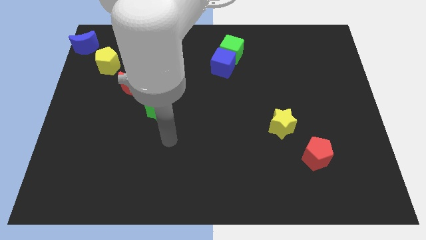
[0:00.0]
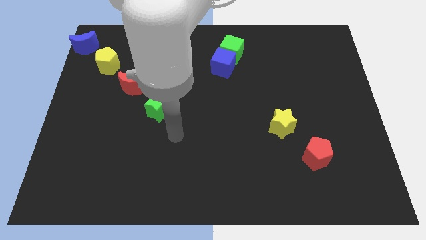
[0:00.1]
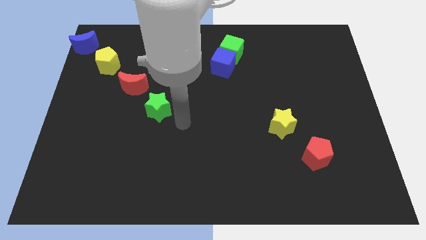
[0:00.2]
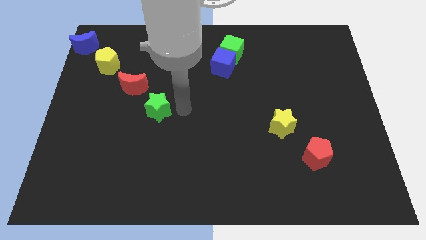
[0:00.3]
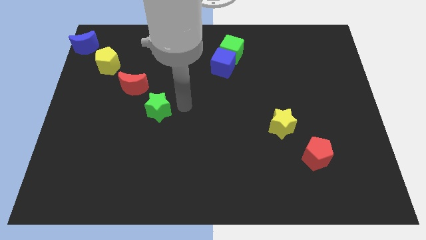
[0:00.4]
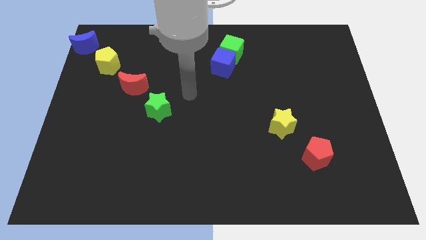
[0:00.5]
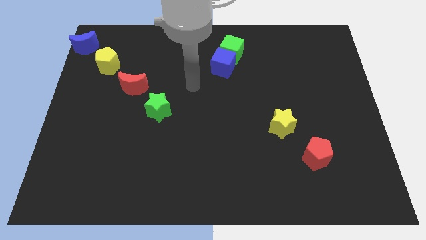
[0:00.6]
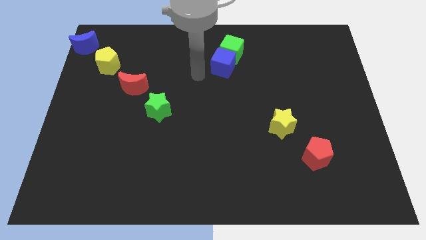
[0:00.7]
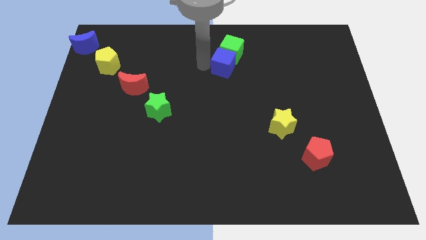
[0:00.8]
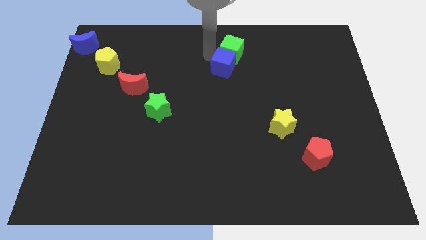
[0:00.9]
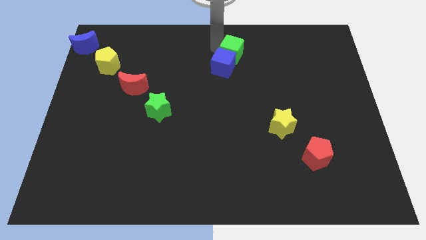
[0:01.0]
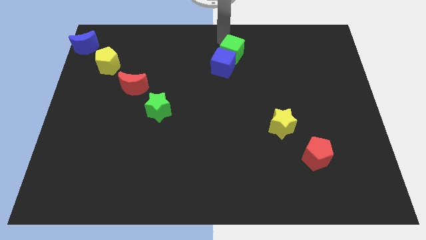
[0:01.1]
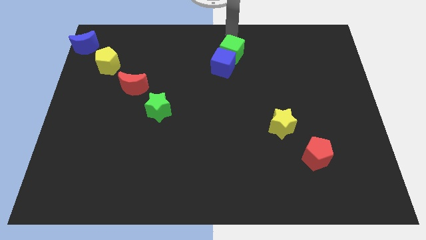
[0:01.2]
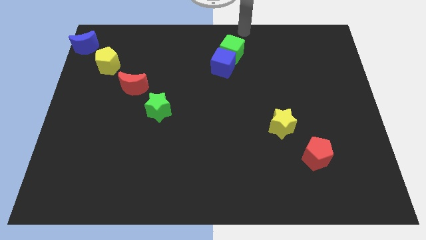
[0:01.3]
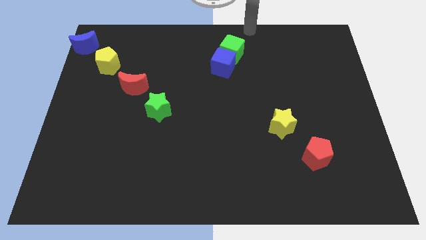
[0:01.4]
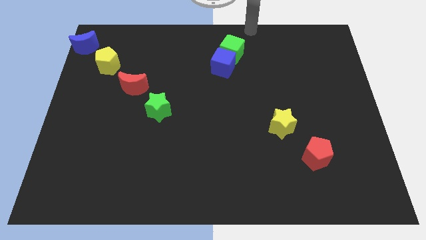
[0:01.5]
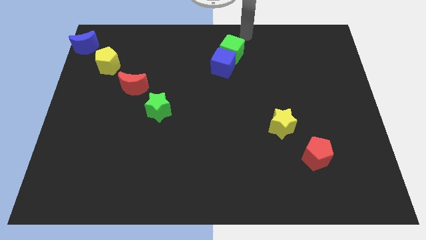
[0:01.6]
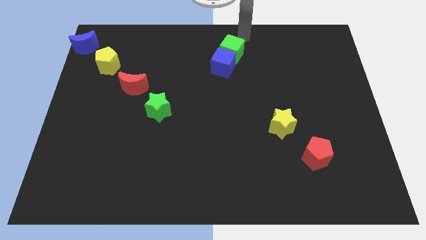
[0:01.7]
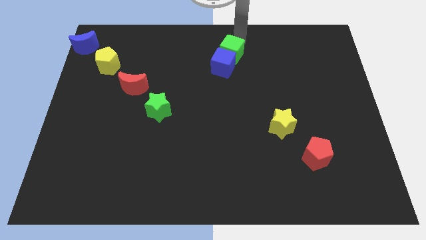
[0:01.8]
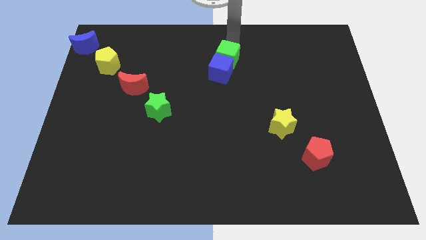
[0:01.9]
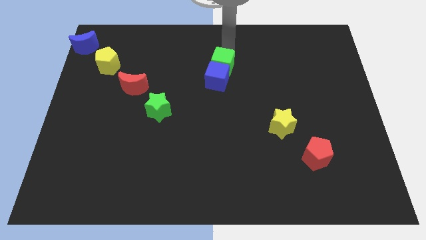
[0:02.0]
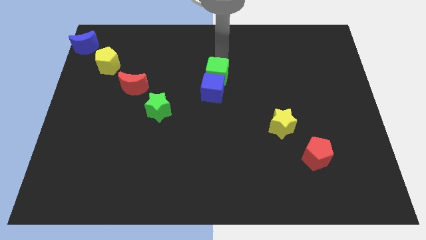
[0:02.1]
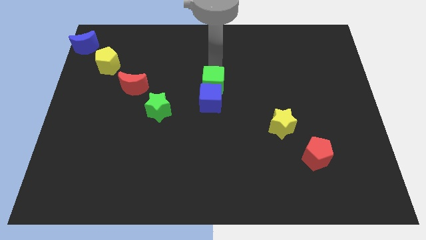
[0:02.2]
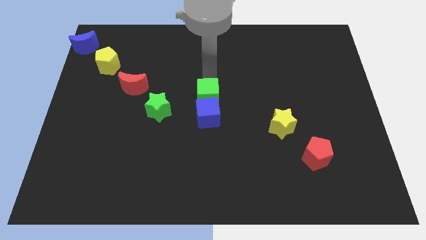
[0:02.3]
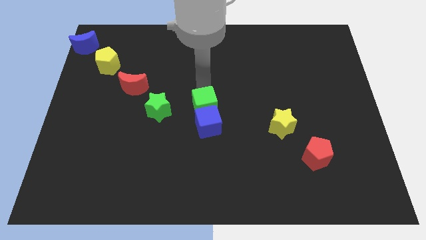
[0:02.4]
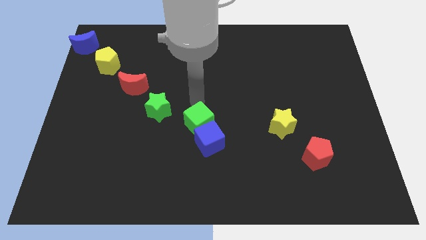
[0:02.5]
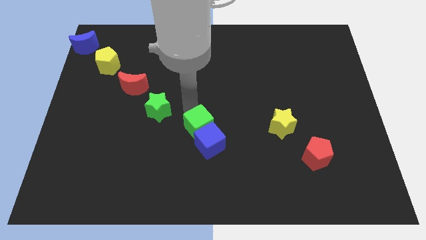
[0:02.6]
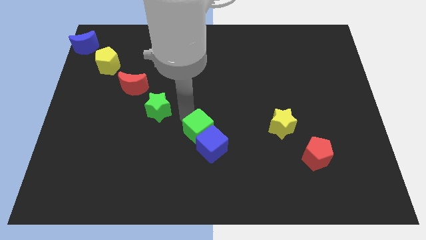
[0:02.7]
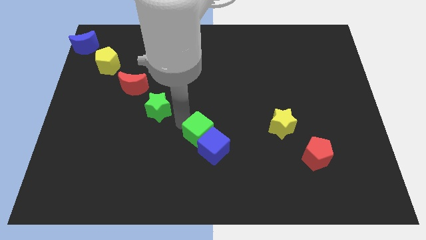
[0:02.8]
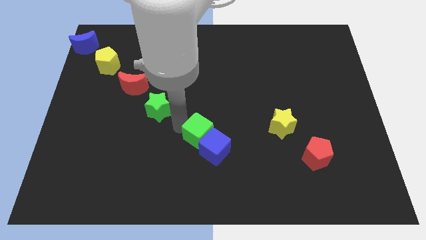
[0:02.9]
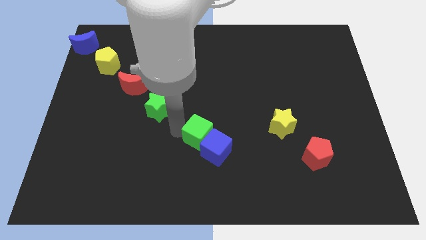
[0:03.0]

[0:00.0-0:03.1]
place the two cubes diagonal to the green star

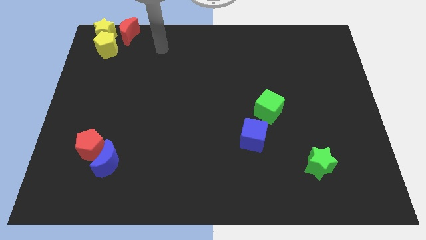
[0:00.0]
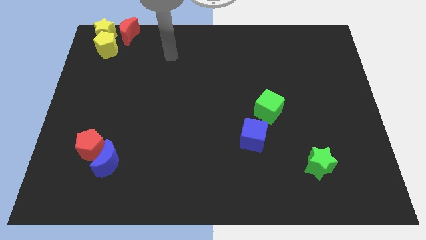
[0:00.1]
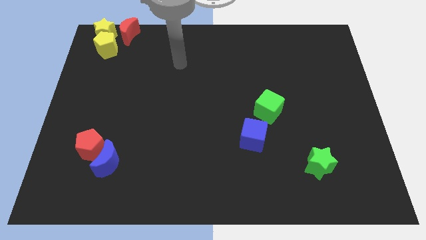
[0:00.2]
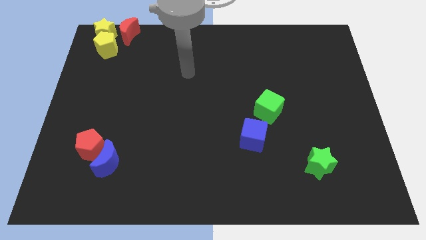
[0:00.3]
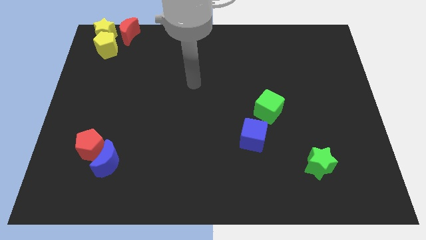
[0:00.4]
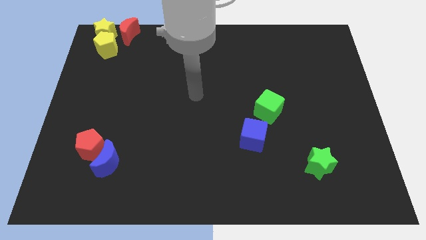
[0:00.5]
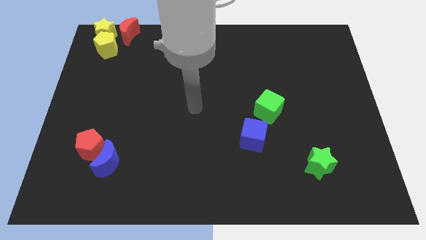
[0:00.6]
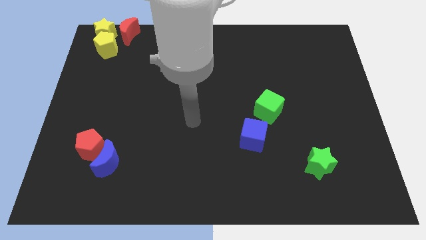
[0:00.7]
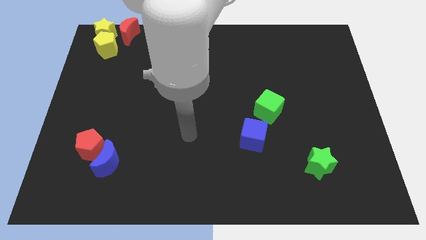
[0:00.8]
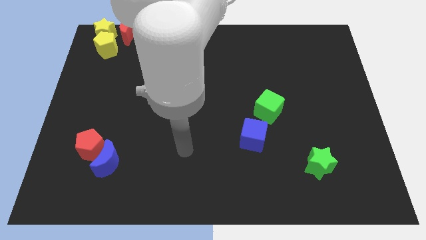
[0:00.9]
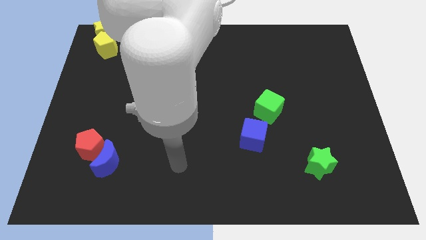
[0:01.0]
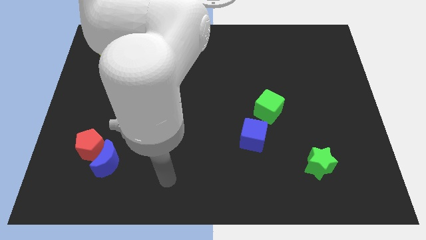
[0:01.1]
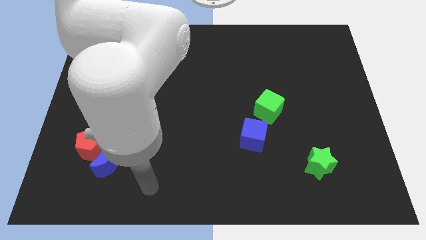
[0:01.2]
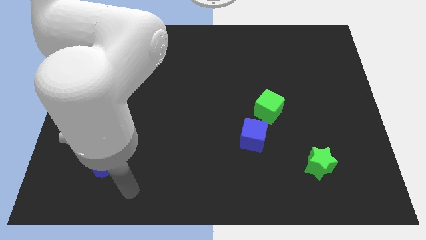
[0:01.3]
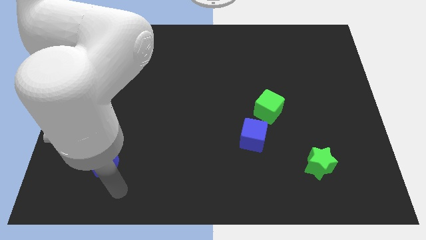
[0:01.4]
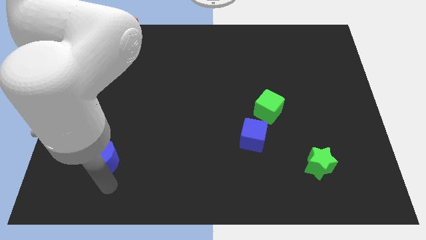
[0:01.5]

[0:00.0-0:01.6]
point the arm to the right bottom of the blue moon

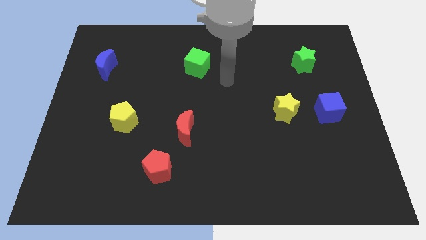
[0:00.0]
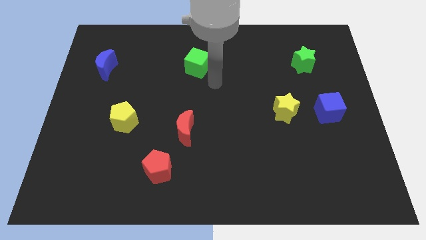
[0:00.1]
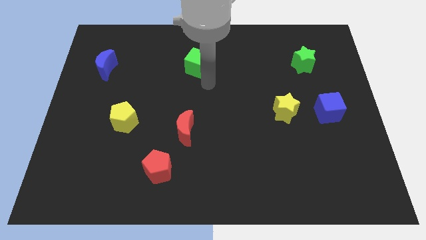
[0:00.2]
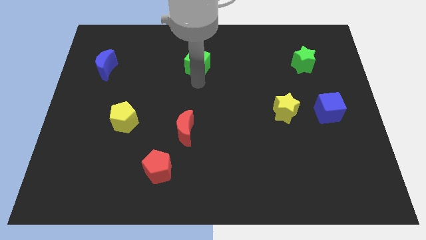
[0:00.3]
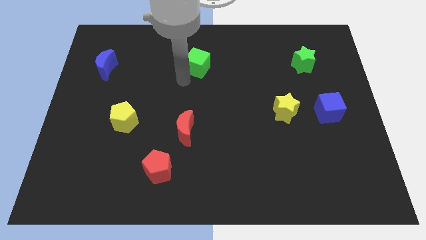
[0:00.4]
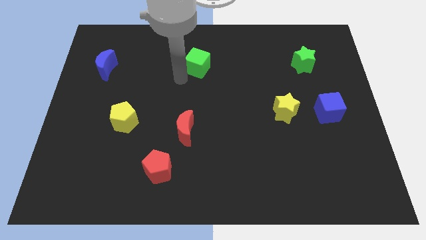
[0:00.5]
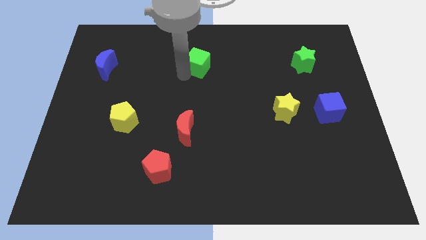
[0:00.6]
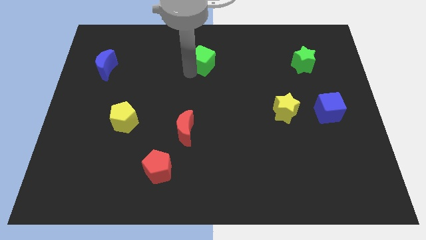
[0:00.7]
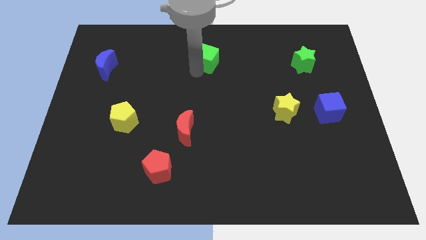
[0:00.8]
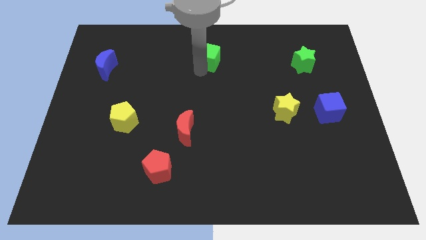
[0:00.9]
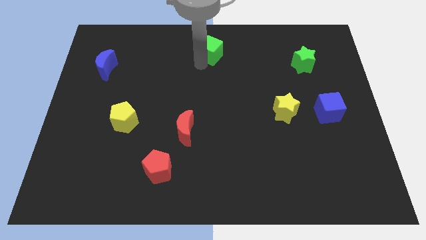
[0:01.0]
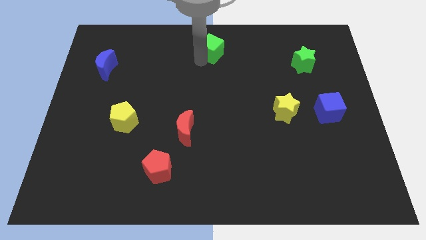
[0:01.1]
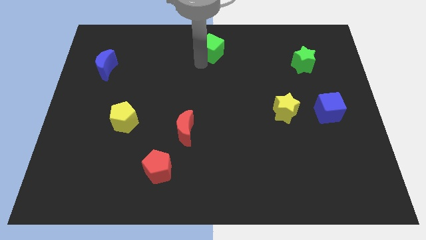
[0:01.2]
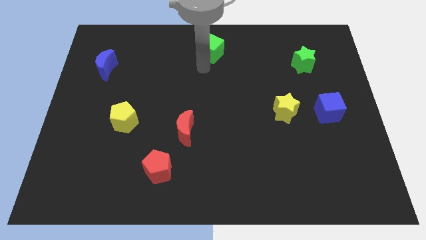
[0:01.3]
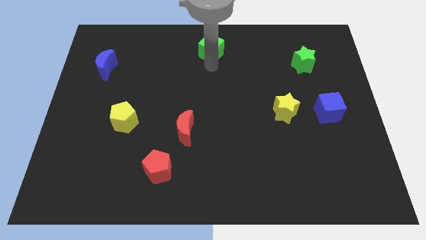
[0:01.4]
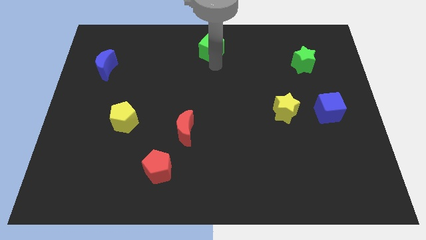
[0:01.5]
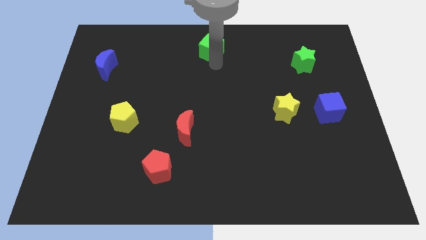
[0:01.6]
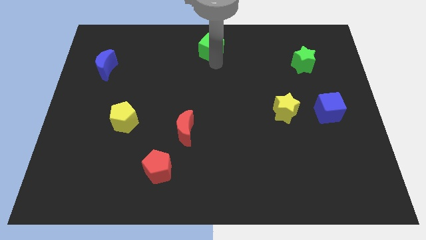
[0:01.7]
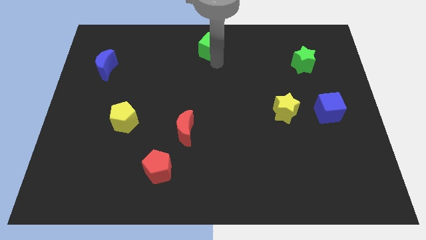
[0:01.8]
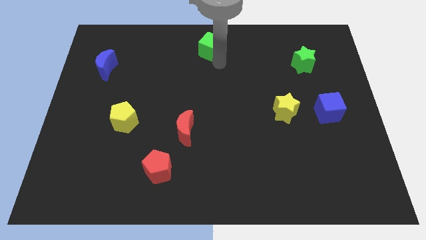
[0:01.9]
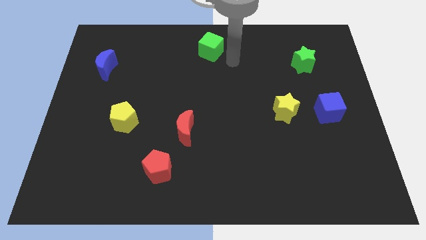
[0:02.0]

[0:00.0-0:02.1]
push the green cube to the top center of the board

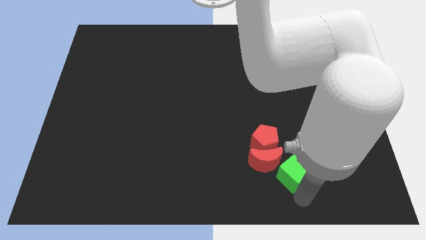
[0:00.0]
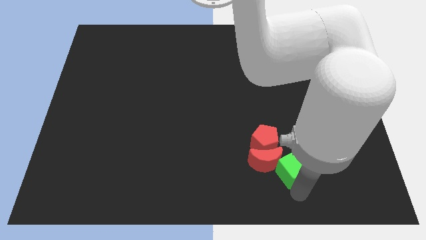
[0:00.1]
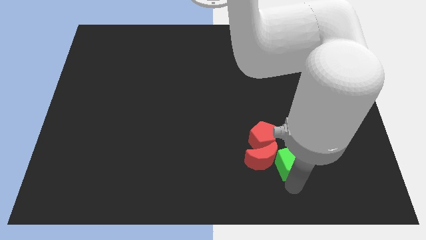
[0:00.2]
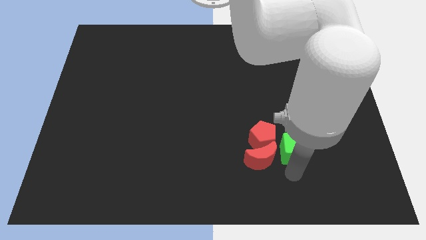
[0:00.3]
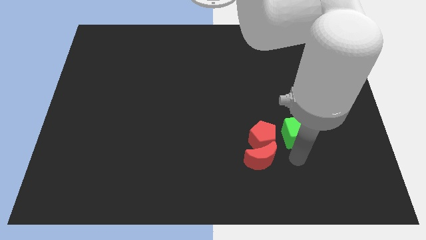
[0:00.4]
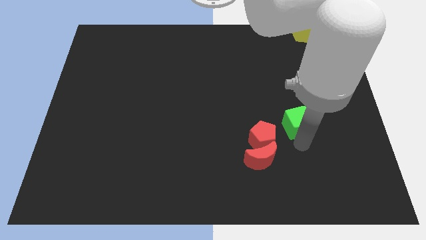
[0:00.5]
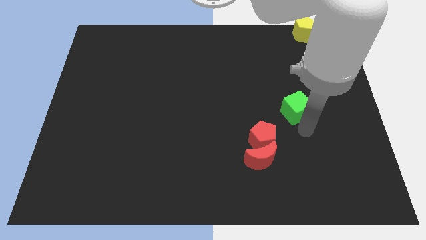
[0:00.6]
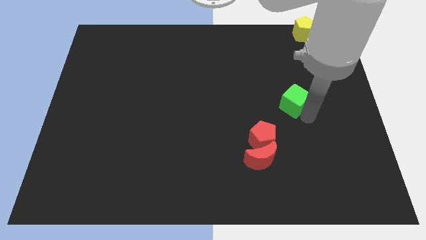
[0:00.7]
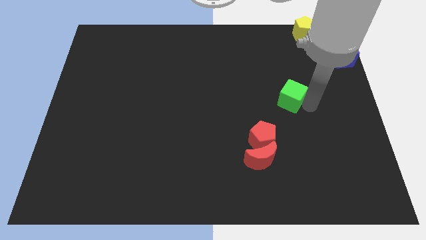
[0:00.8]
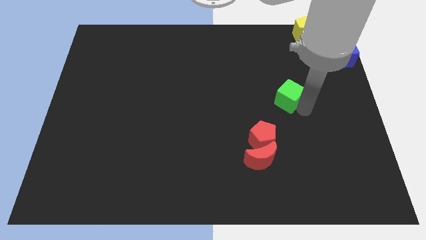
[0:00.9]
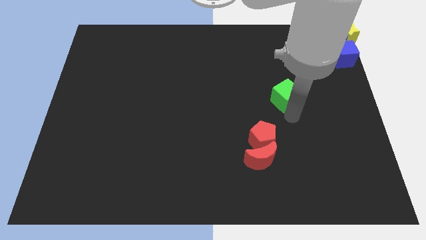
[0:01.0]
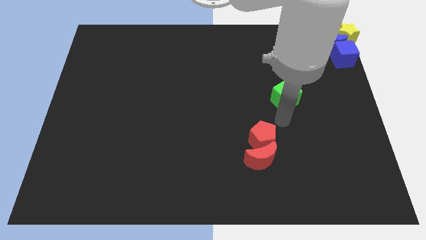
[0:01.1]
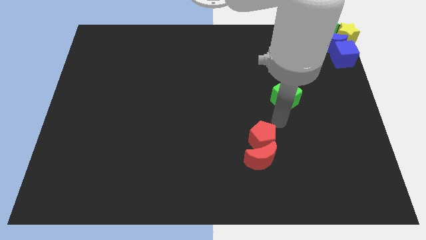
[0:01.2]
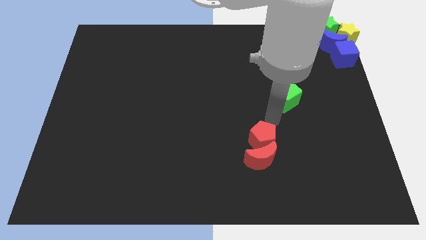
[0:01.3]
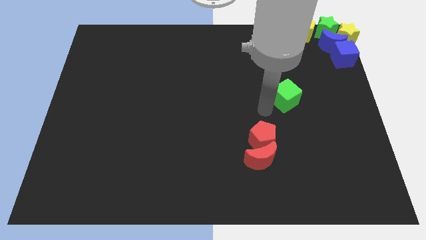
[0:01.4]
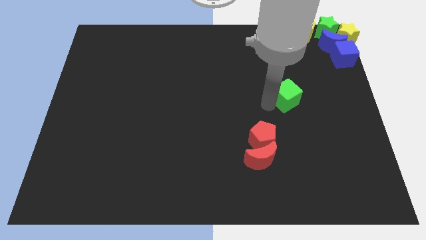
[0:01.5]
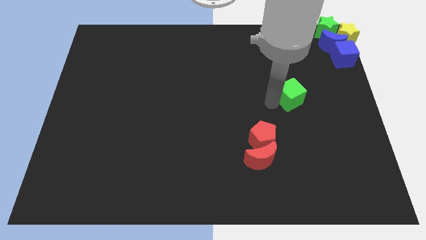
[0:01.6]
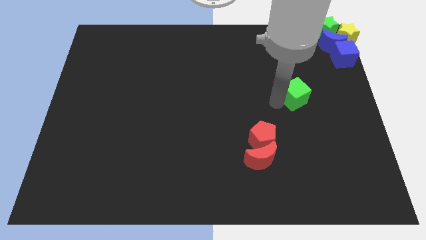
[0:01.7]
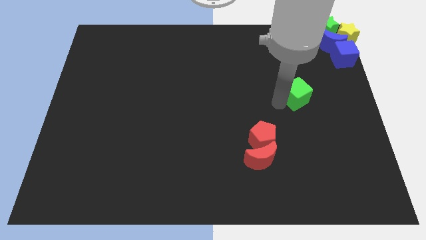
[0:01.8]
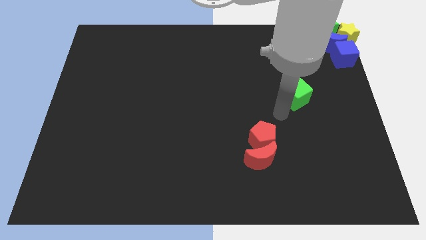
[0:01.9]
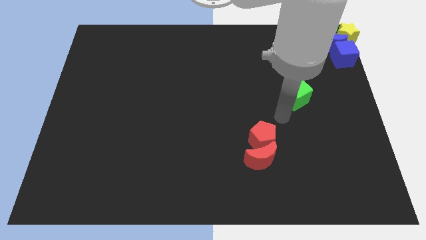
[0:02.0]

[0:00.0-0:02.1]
separate green cube from red blocks

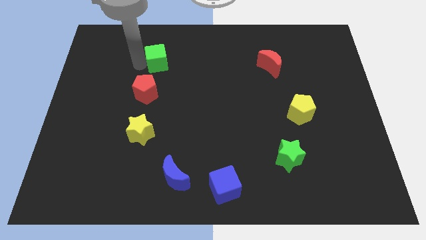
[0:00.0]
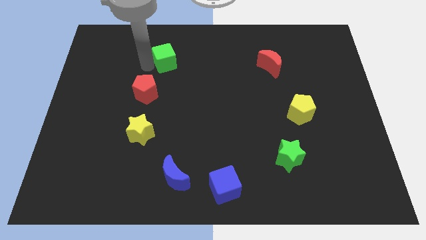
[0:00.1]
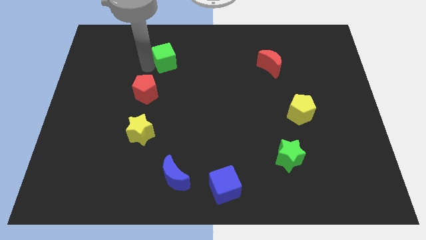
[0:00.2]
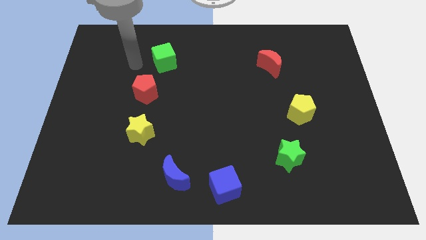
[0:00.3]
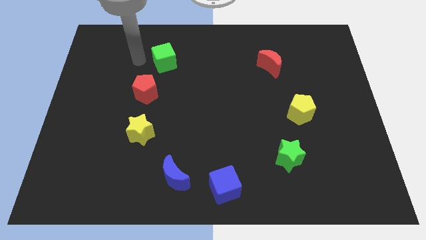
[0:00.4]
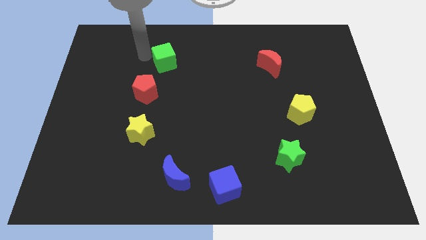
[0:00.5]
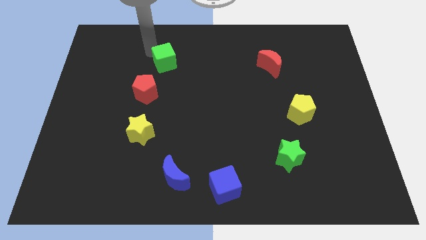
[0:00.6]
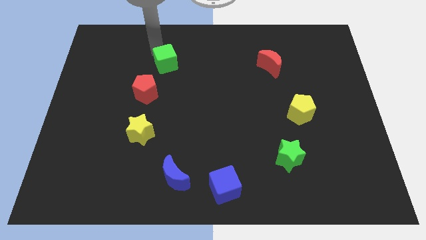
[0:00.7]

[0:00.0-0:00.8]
place the green cube towards the top right side of the red pentagon
